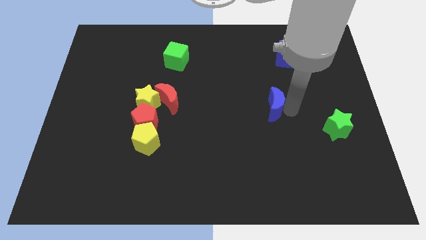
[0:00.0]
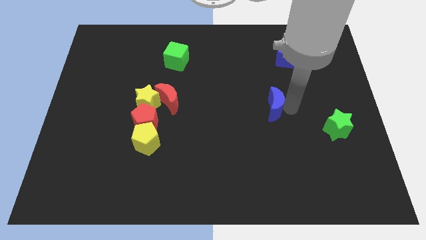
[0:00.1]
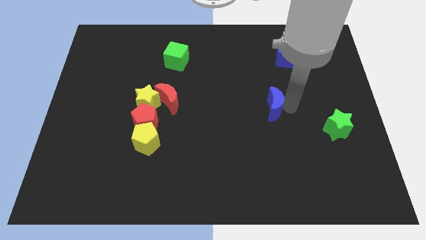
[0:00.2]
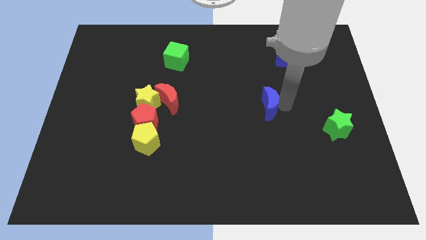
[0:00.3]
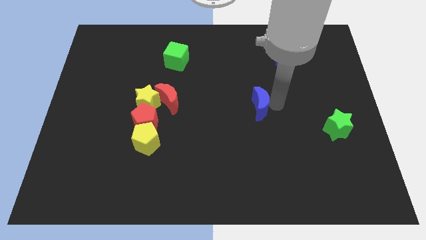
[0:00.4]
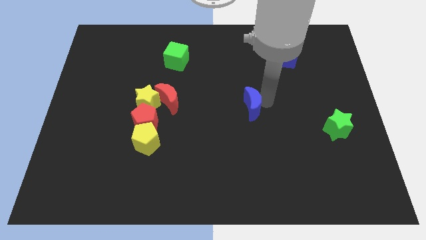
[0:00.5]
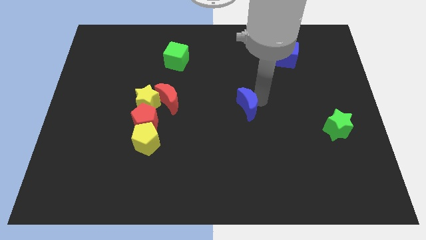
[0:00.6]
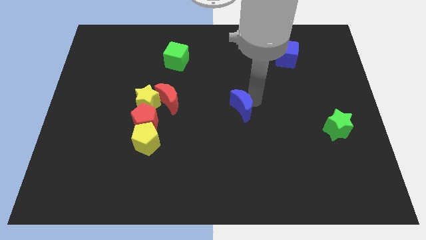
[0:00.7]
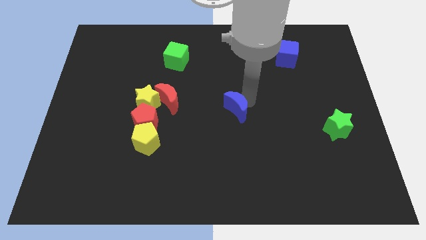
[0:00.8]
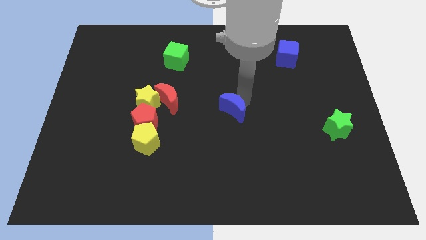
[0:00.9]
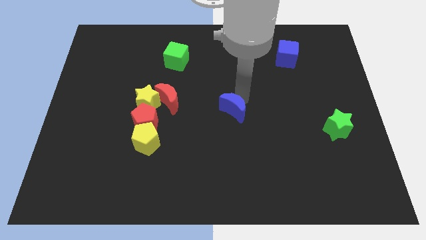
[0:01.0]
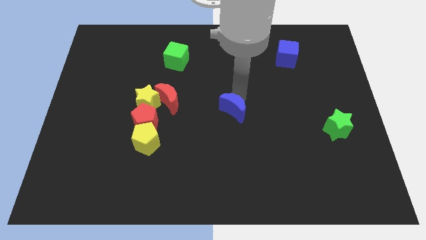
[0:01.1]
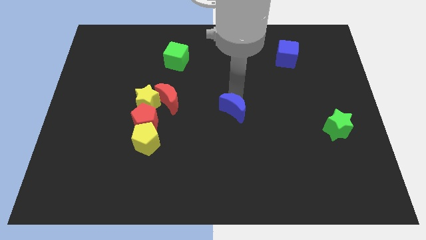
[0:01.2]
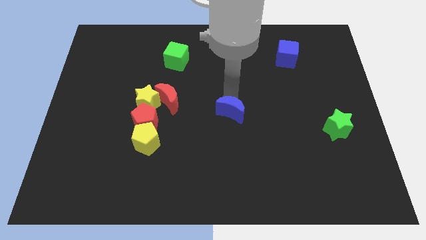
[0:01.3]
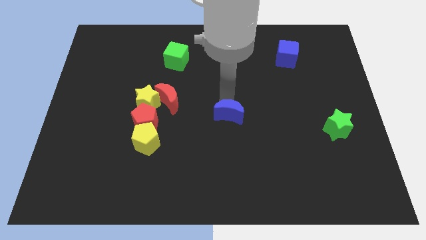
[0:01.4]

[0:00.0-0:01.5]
move the blue crescent towards the centre of the board

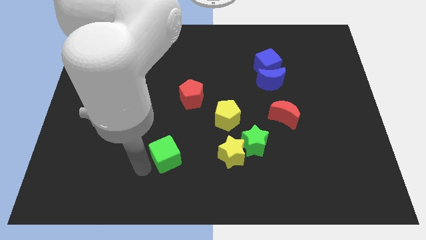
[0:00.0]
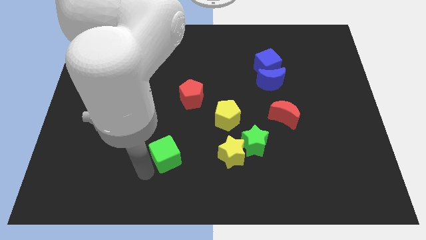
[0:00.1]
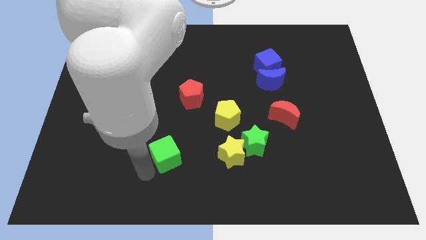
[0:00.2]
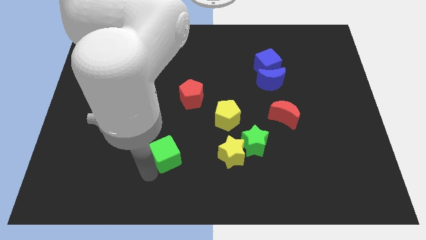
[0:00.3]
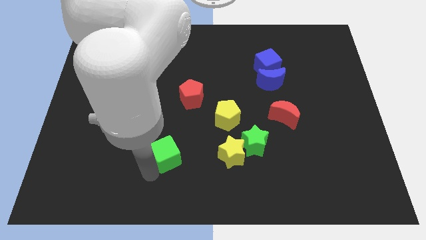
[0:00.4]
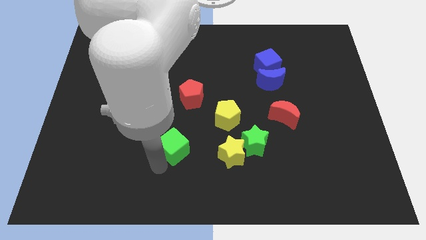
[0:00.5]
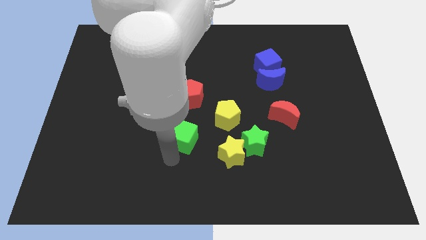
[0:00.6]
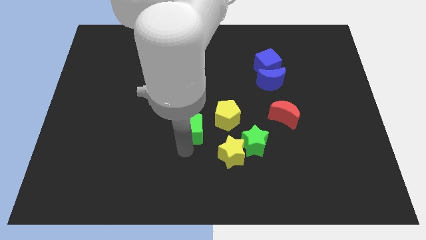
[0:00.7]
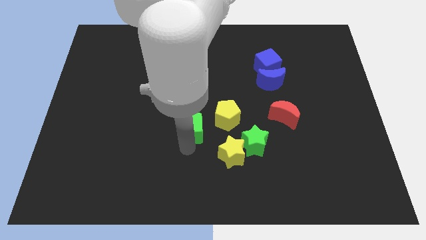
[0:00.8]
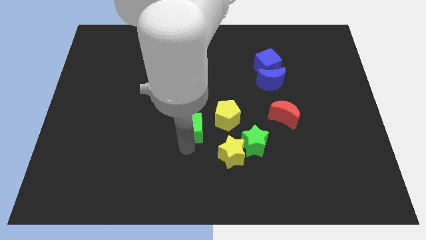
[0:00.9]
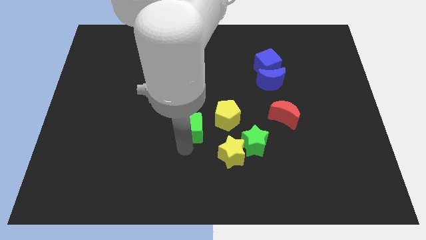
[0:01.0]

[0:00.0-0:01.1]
place green cube below red pentagon

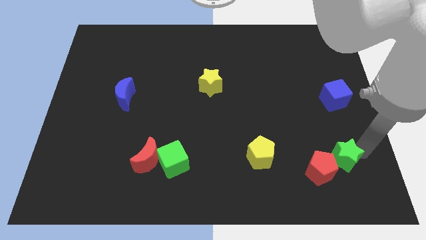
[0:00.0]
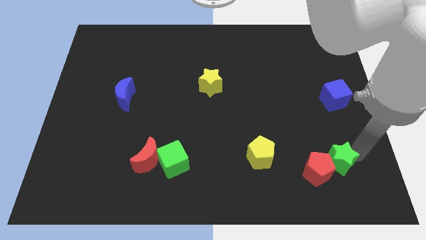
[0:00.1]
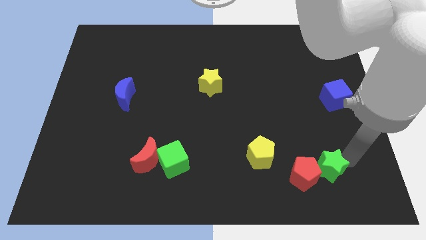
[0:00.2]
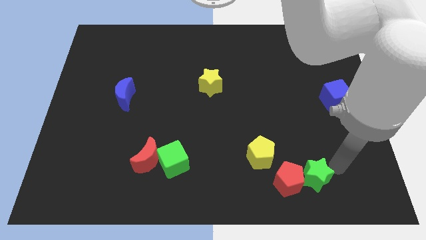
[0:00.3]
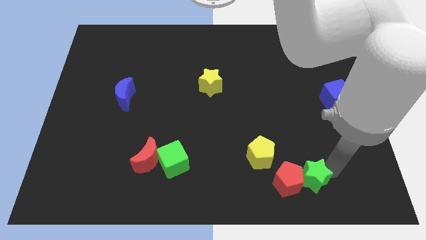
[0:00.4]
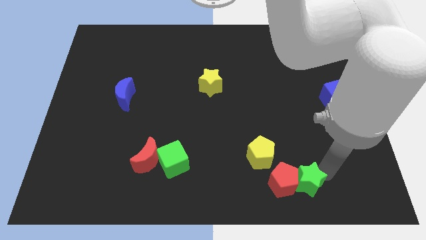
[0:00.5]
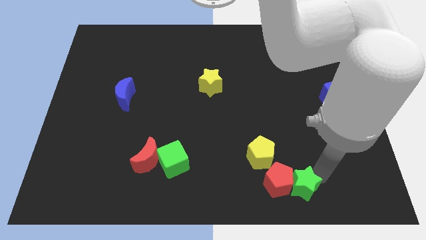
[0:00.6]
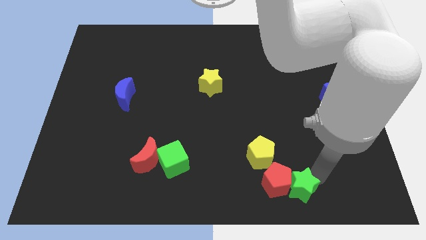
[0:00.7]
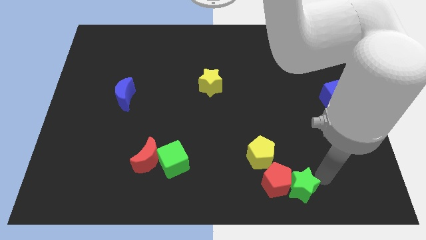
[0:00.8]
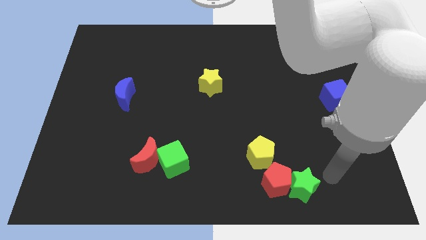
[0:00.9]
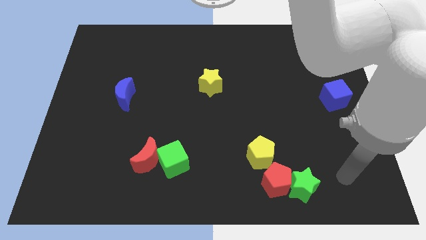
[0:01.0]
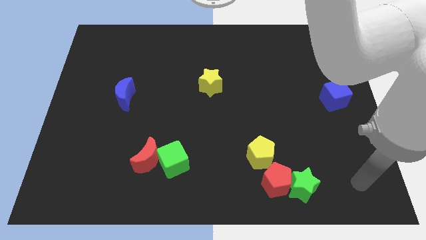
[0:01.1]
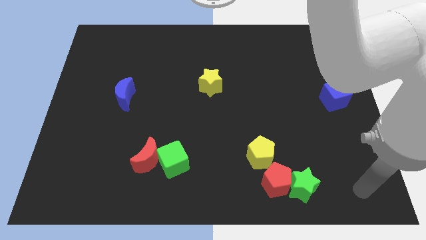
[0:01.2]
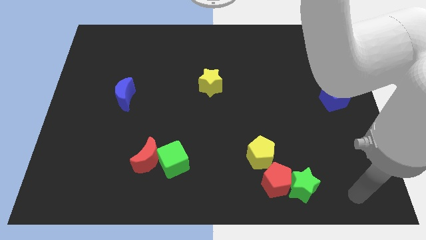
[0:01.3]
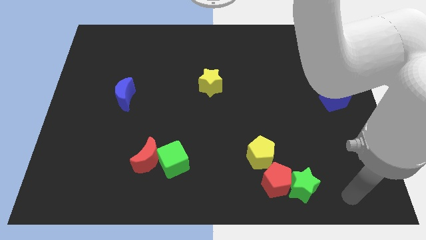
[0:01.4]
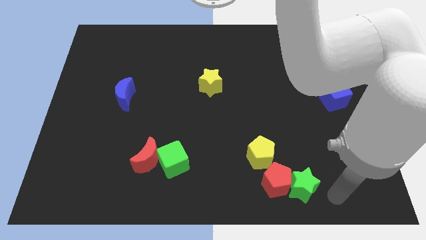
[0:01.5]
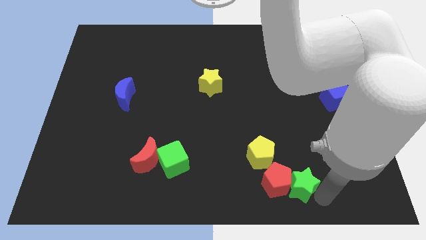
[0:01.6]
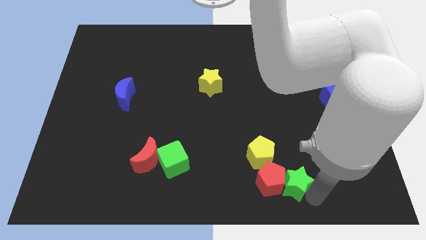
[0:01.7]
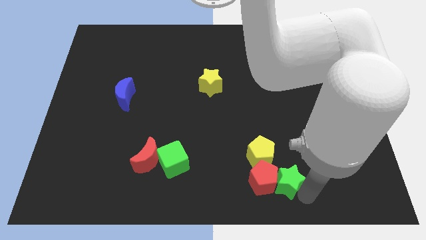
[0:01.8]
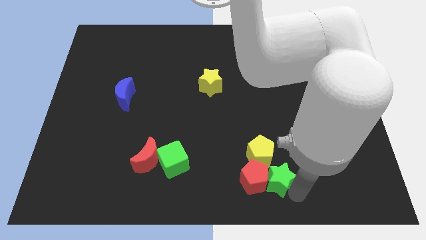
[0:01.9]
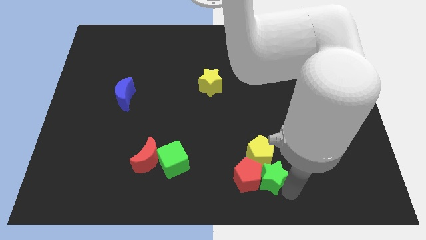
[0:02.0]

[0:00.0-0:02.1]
slide green star along with red pentagon below the yellow pentagon

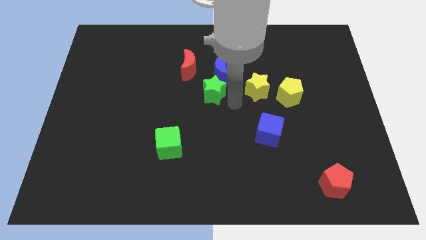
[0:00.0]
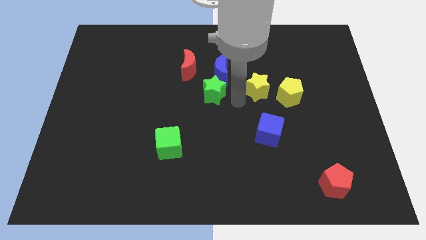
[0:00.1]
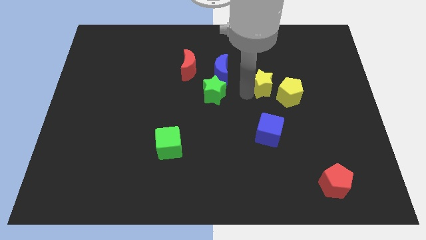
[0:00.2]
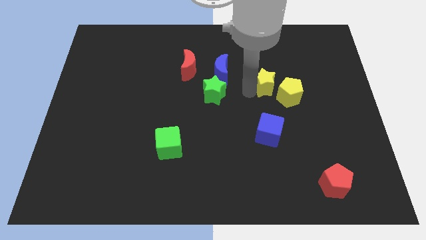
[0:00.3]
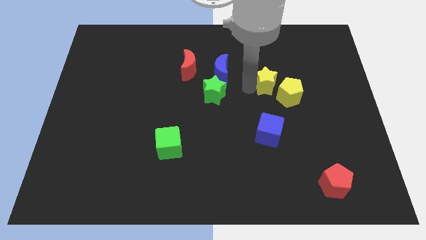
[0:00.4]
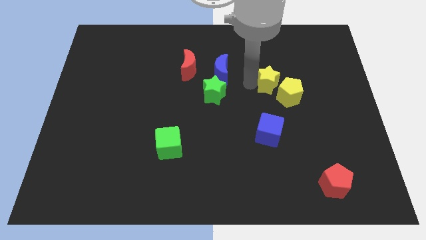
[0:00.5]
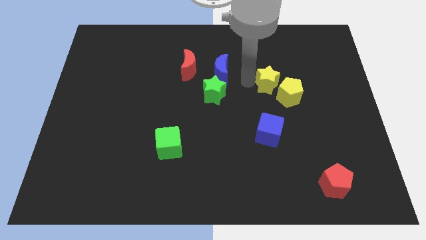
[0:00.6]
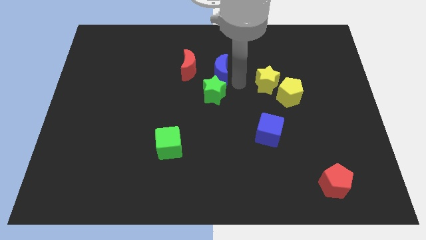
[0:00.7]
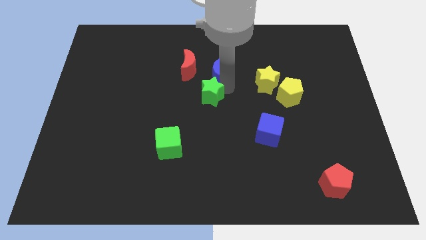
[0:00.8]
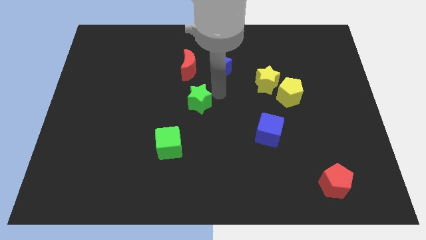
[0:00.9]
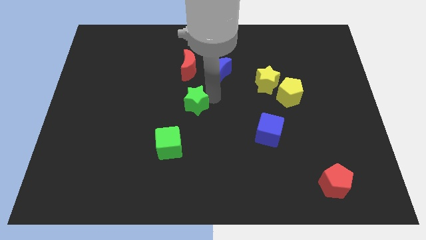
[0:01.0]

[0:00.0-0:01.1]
slightly push the green star to the left of the yellow pentagon

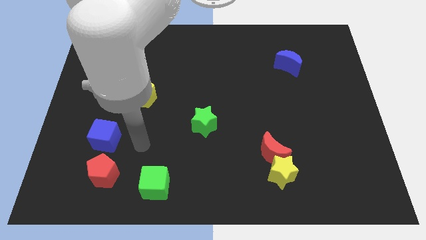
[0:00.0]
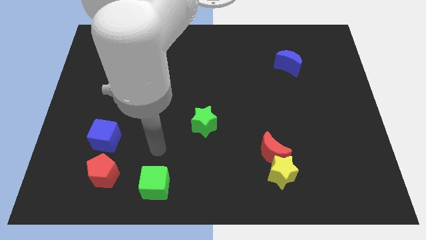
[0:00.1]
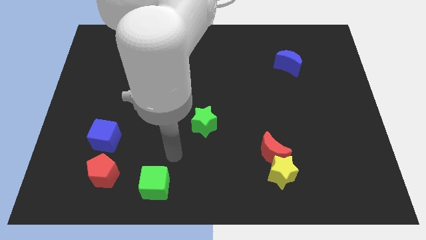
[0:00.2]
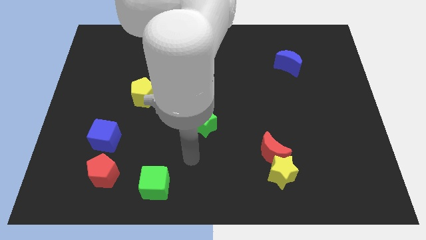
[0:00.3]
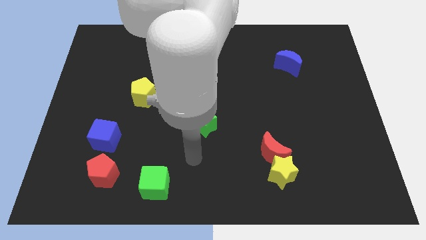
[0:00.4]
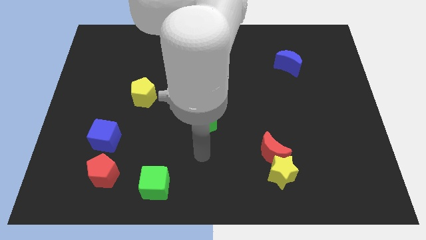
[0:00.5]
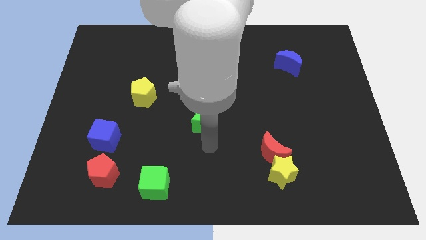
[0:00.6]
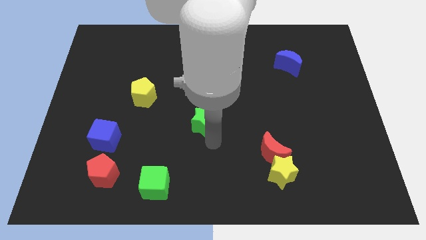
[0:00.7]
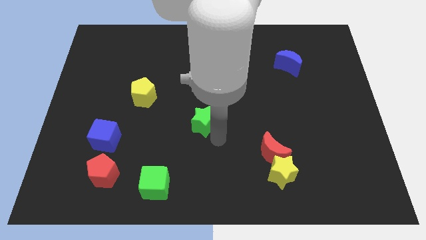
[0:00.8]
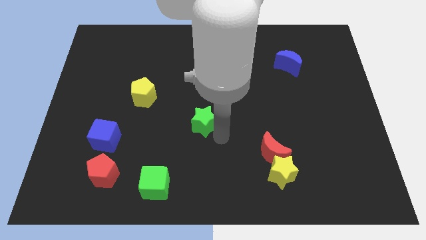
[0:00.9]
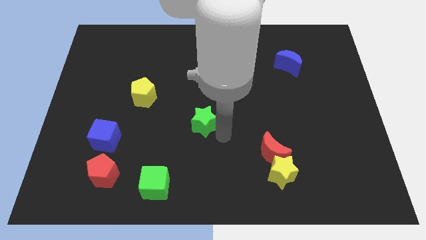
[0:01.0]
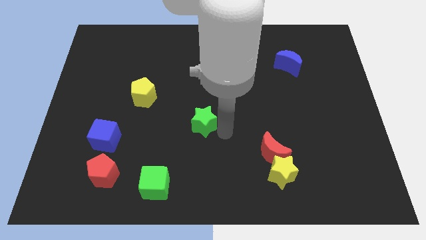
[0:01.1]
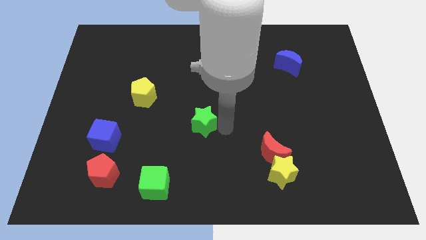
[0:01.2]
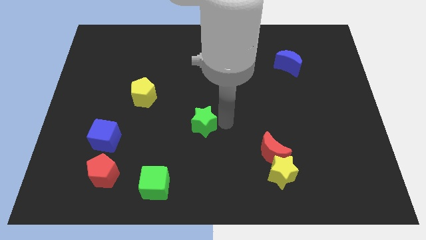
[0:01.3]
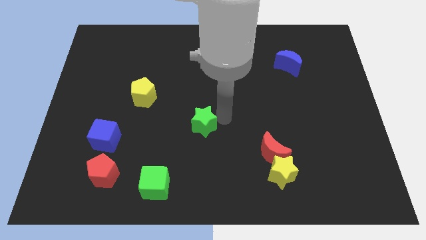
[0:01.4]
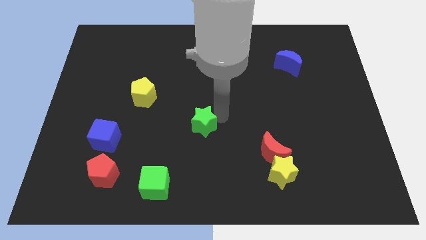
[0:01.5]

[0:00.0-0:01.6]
move your arm towards the green star

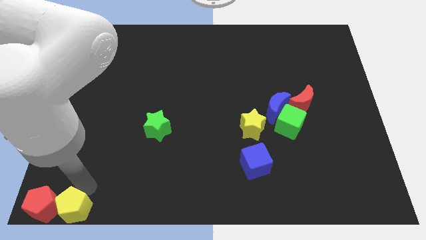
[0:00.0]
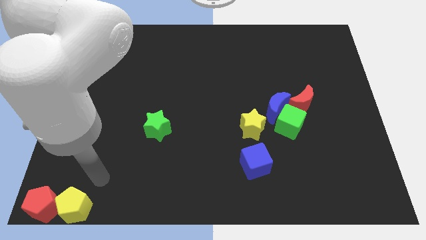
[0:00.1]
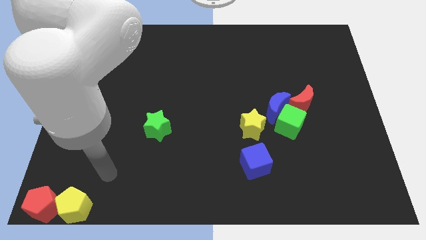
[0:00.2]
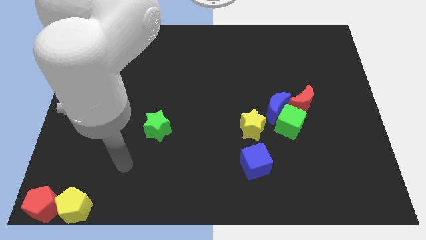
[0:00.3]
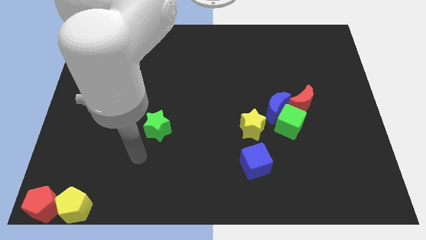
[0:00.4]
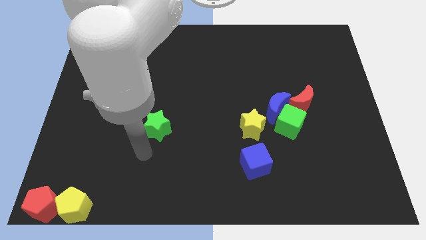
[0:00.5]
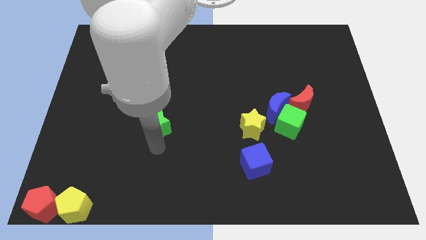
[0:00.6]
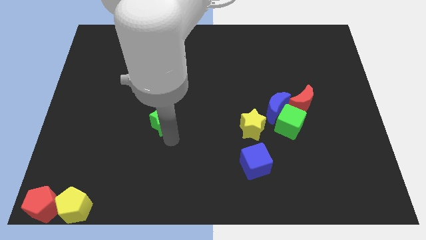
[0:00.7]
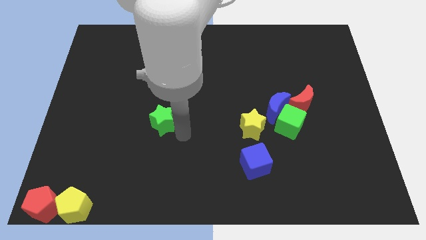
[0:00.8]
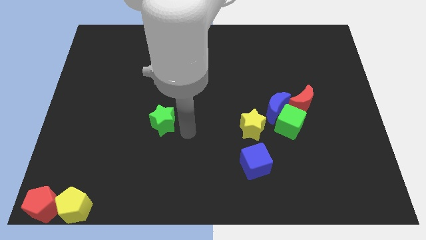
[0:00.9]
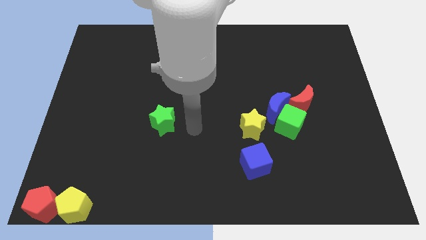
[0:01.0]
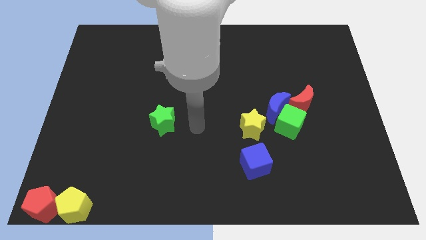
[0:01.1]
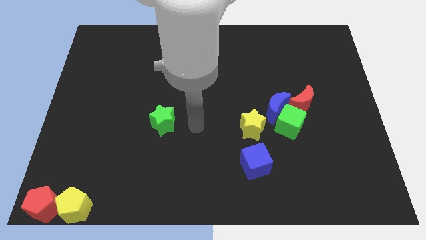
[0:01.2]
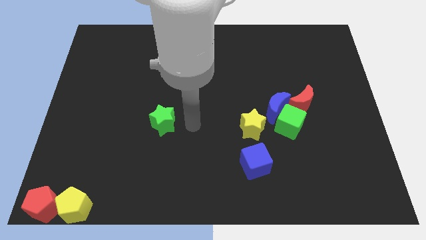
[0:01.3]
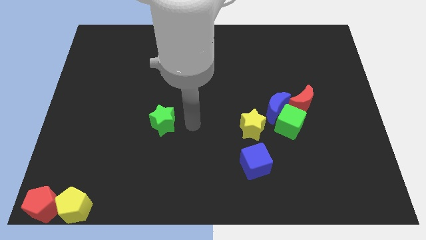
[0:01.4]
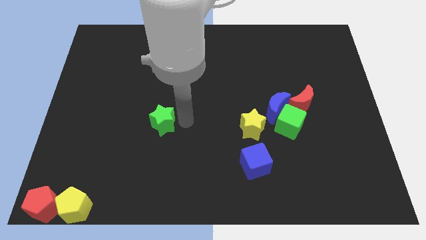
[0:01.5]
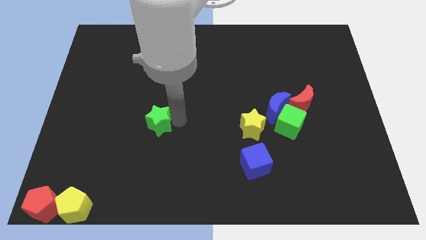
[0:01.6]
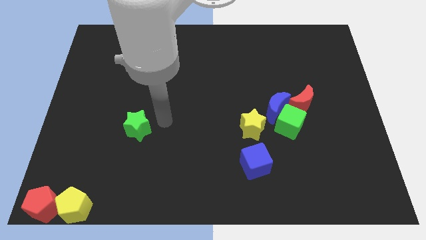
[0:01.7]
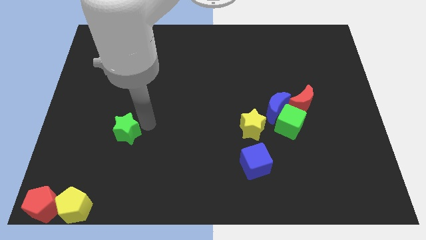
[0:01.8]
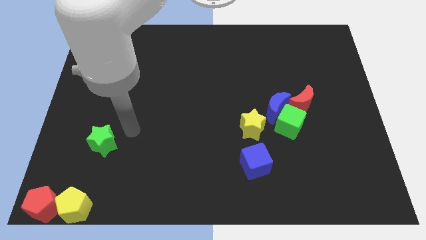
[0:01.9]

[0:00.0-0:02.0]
slightly move the green star
